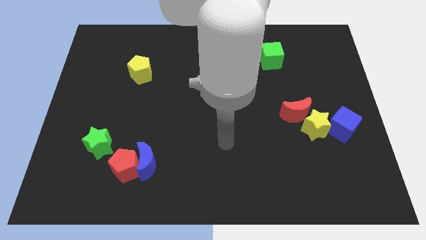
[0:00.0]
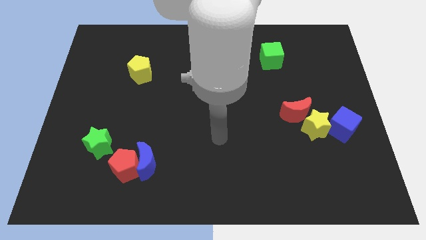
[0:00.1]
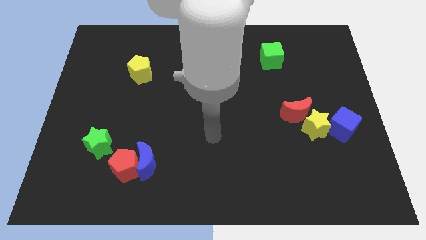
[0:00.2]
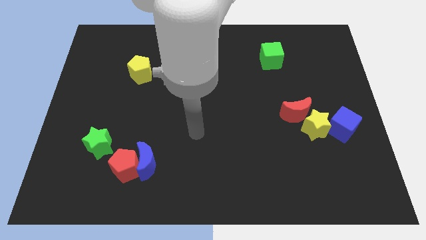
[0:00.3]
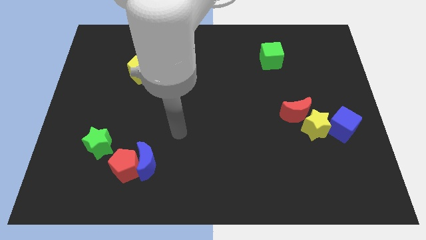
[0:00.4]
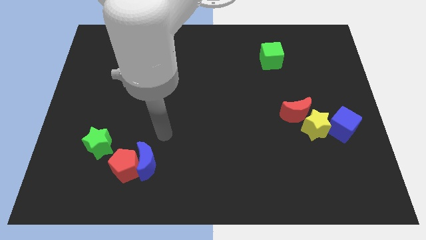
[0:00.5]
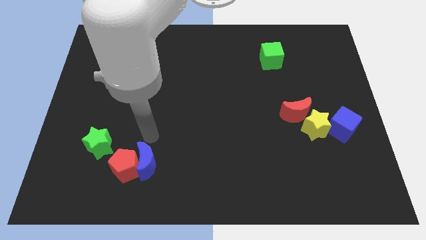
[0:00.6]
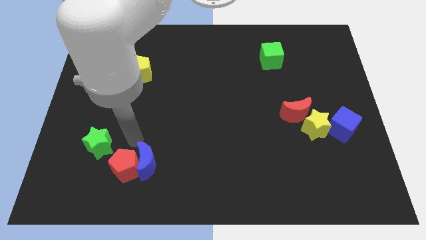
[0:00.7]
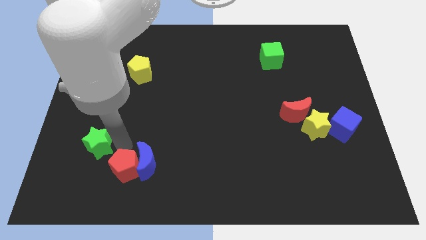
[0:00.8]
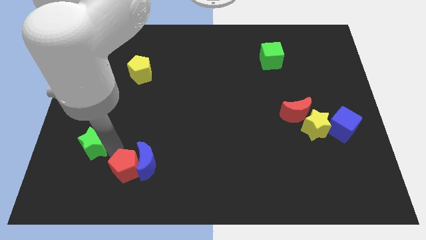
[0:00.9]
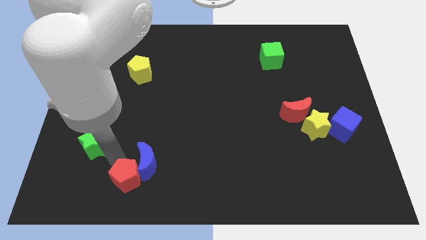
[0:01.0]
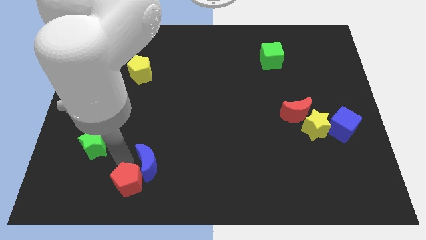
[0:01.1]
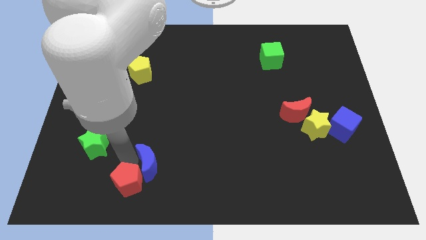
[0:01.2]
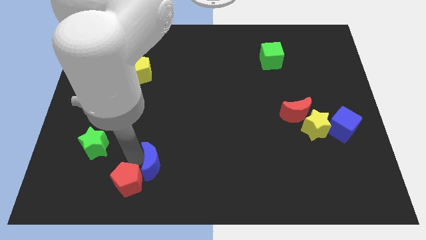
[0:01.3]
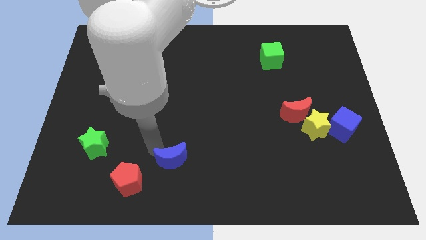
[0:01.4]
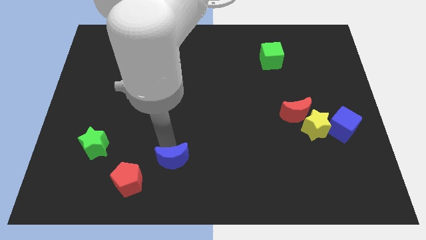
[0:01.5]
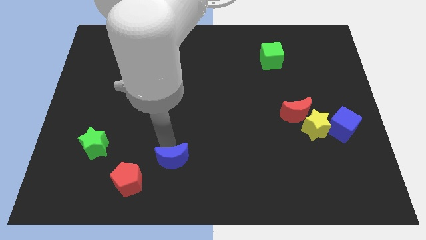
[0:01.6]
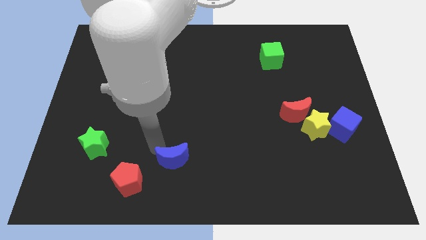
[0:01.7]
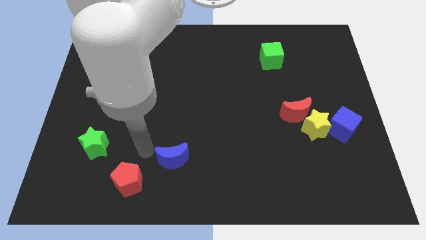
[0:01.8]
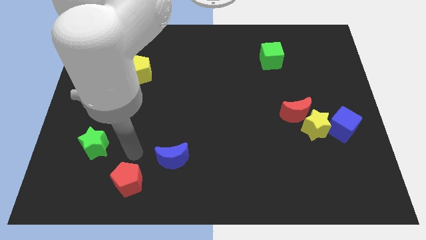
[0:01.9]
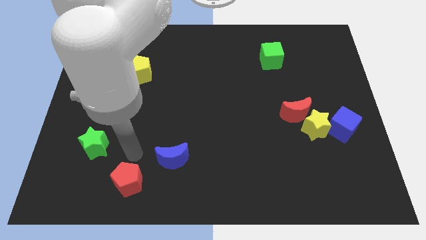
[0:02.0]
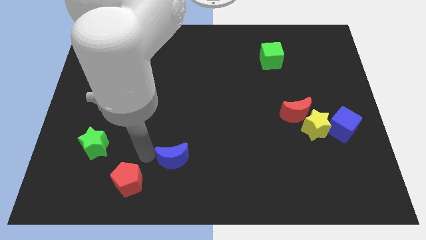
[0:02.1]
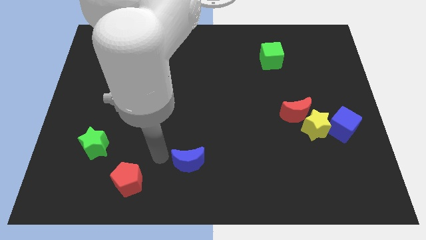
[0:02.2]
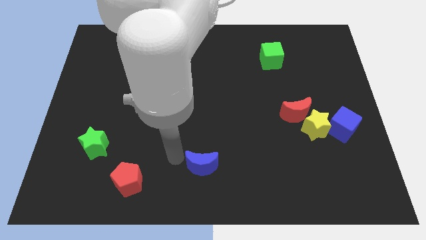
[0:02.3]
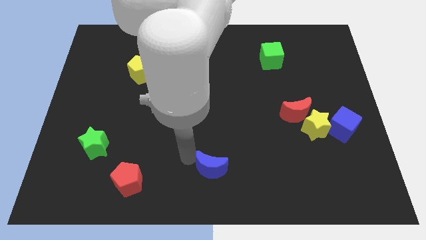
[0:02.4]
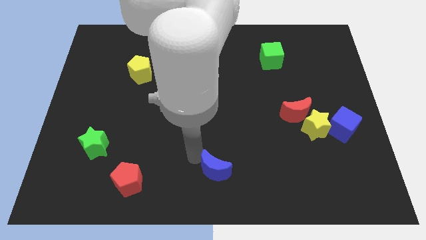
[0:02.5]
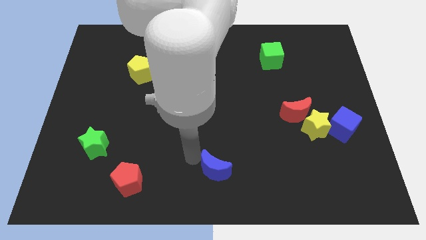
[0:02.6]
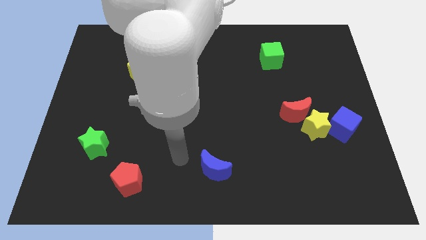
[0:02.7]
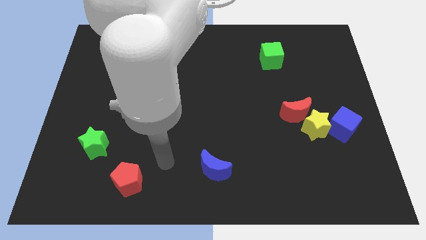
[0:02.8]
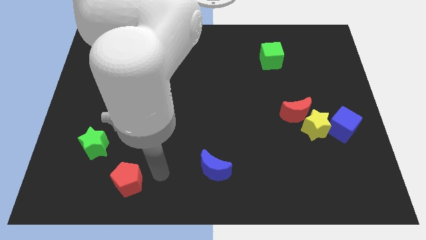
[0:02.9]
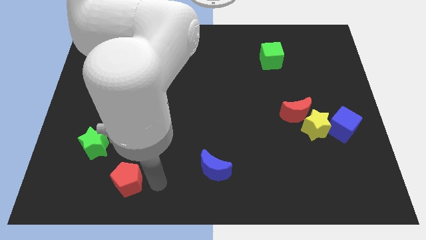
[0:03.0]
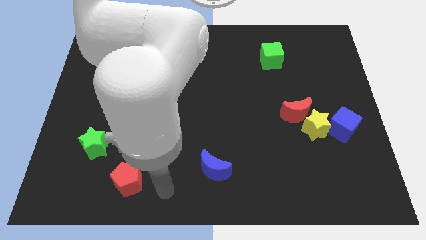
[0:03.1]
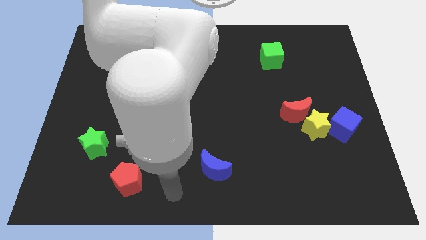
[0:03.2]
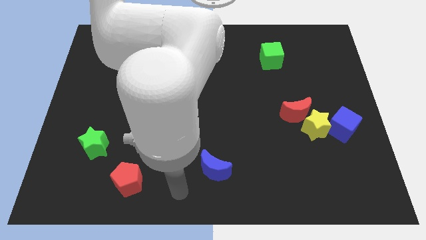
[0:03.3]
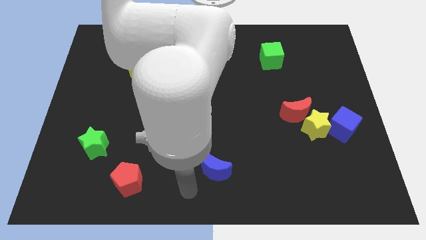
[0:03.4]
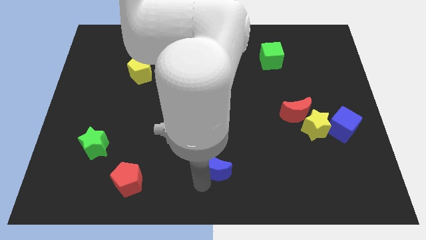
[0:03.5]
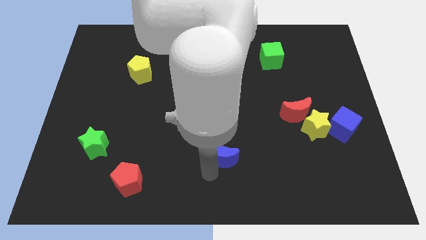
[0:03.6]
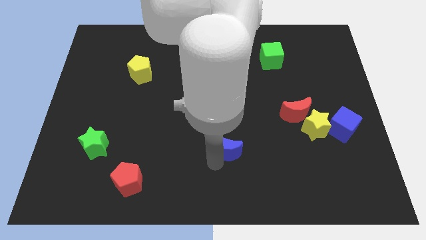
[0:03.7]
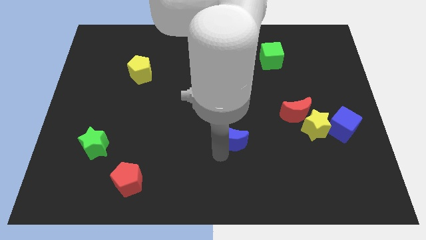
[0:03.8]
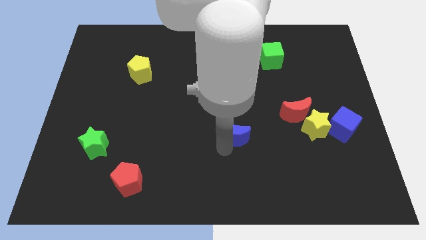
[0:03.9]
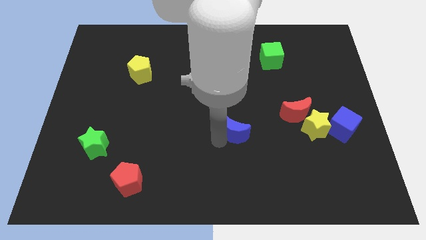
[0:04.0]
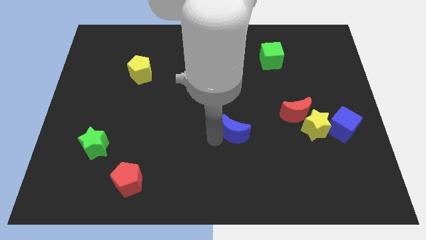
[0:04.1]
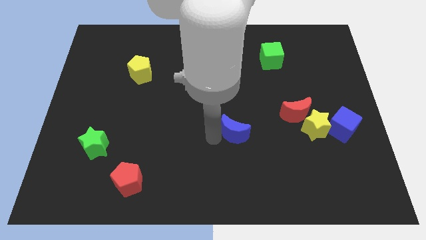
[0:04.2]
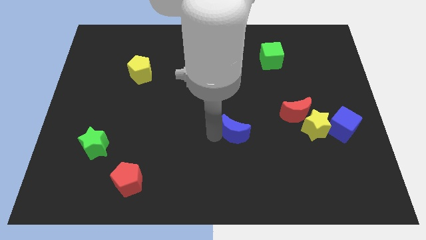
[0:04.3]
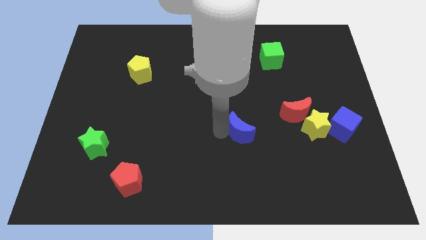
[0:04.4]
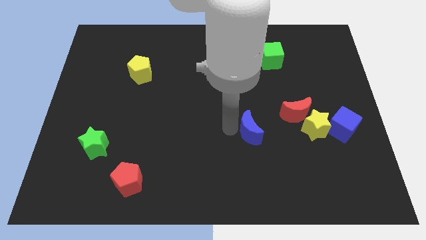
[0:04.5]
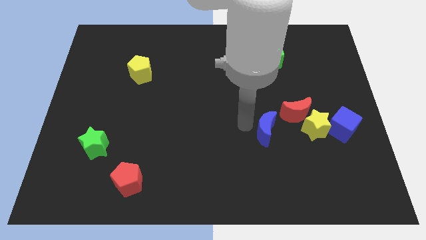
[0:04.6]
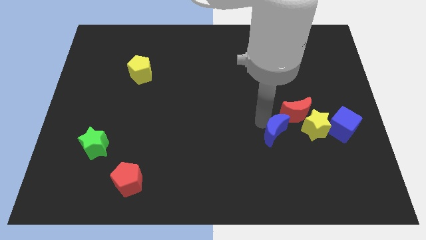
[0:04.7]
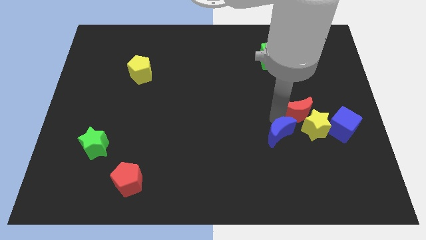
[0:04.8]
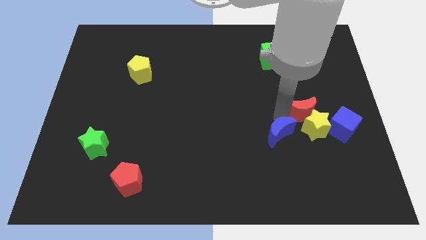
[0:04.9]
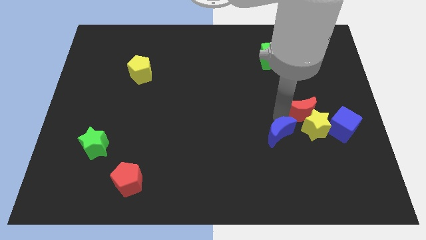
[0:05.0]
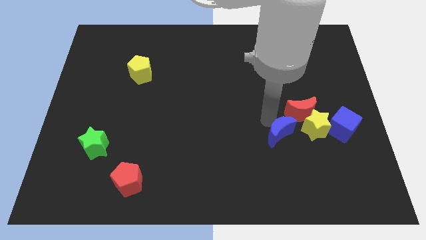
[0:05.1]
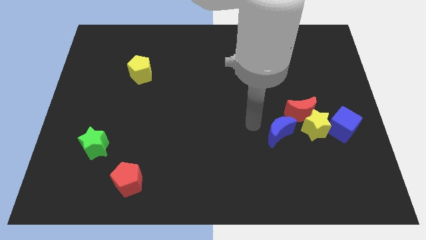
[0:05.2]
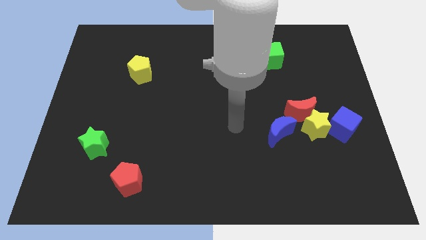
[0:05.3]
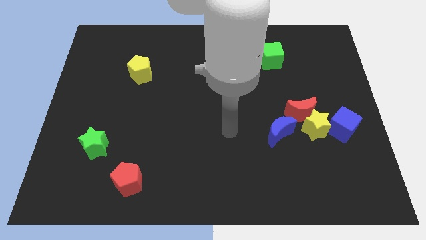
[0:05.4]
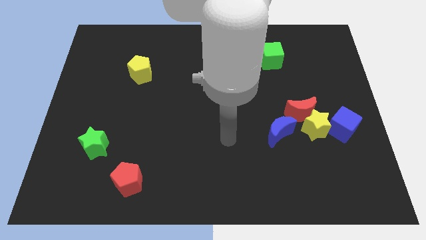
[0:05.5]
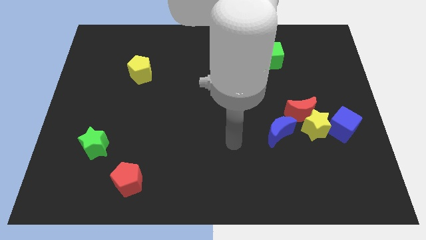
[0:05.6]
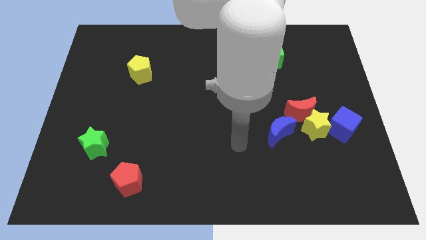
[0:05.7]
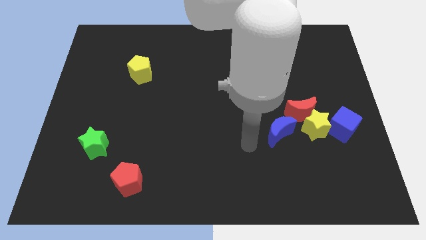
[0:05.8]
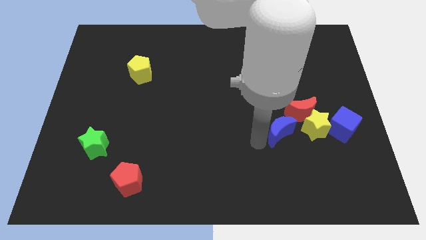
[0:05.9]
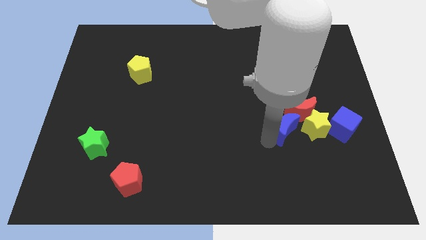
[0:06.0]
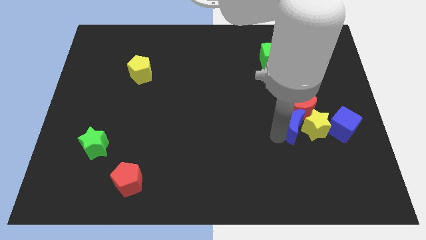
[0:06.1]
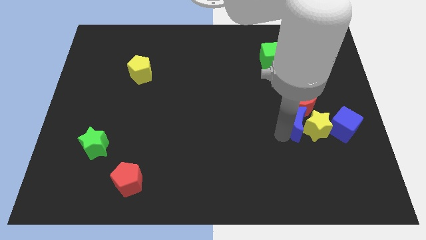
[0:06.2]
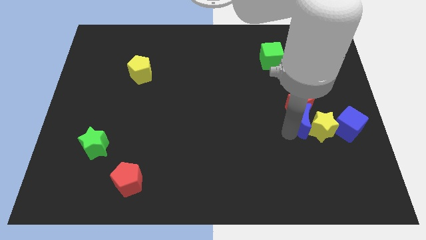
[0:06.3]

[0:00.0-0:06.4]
put the blue moon to the yellow star

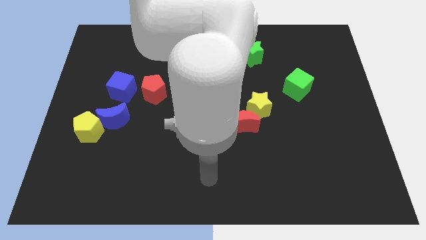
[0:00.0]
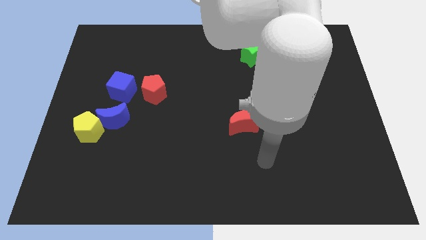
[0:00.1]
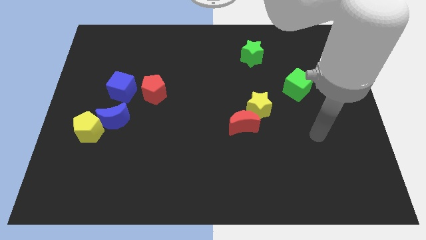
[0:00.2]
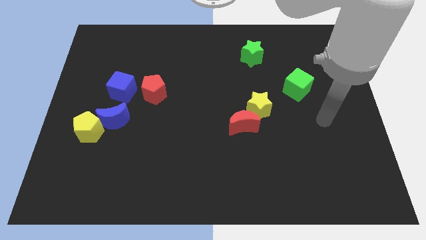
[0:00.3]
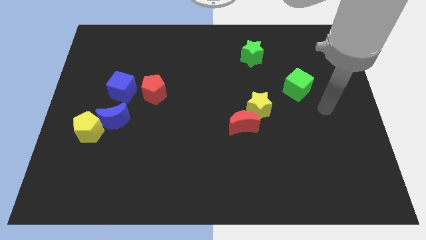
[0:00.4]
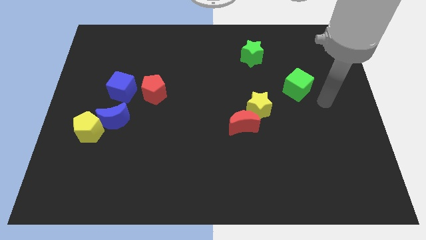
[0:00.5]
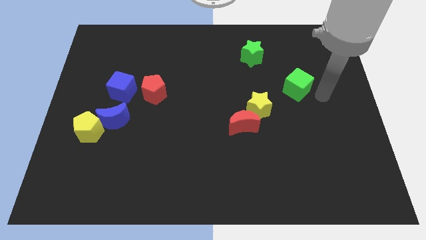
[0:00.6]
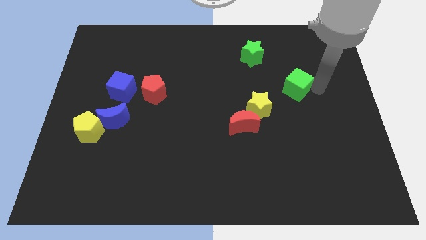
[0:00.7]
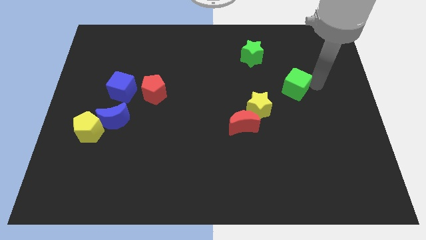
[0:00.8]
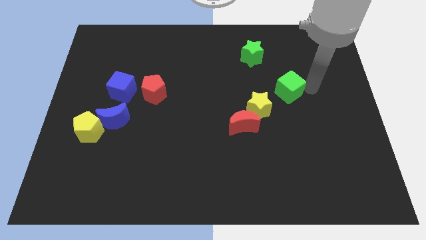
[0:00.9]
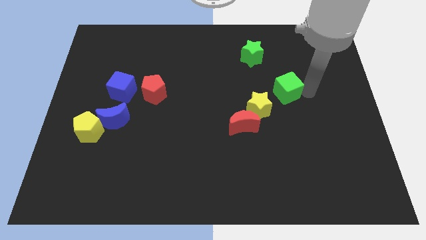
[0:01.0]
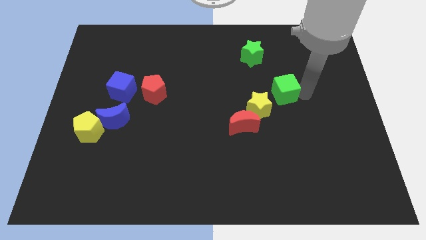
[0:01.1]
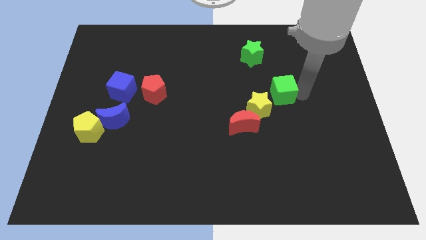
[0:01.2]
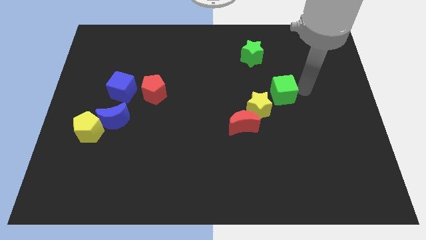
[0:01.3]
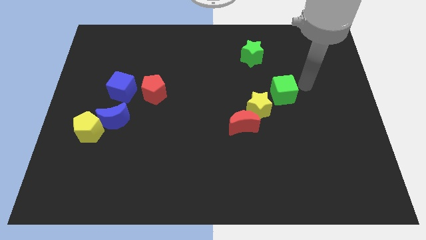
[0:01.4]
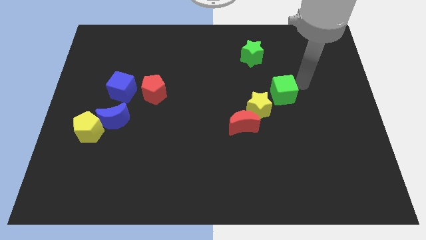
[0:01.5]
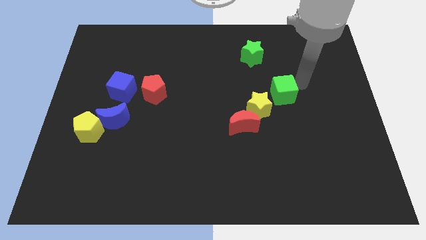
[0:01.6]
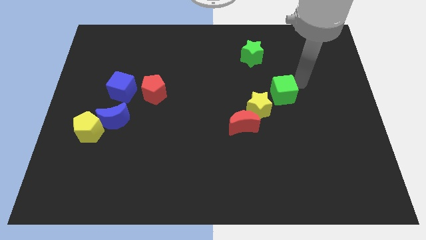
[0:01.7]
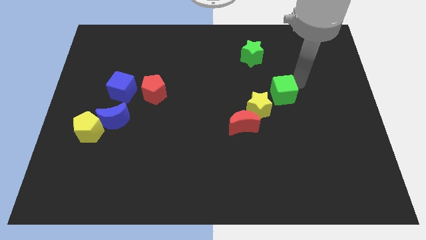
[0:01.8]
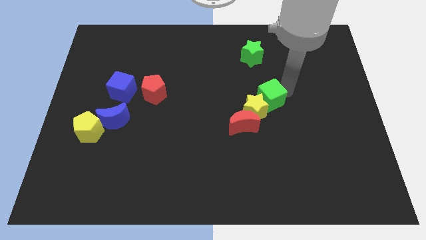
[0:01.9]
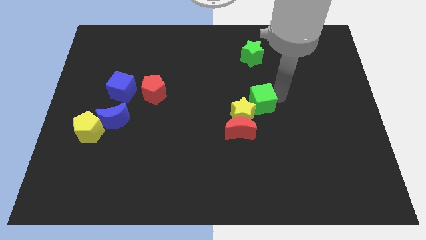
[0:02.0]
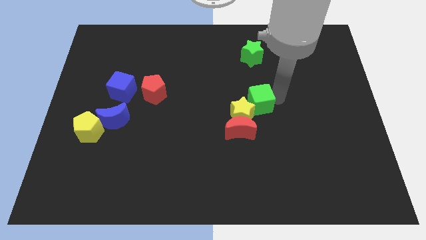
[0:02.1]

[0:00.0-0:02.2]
put the green cube close to the yellow star
